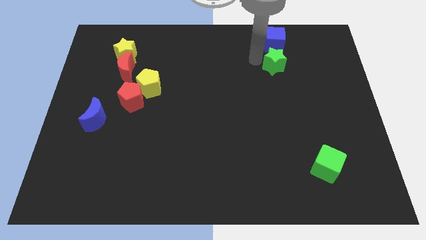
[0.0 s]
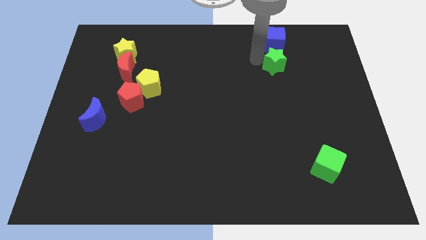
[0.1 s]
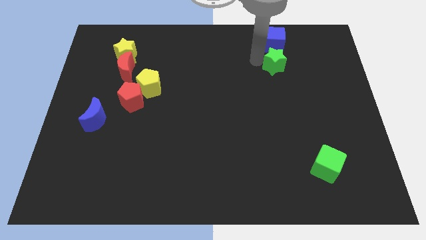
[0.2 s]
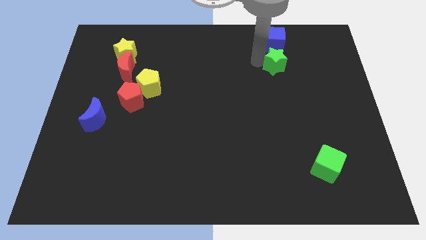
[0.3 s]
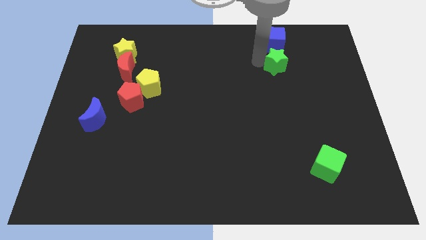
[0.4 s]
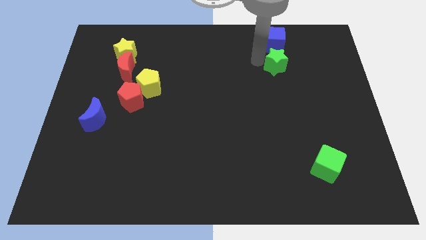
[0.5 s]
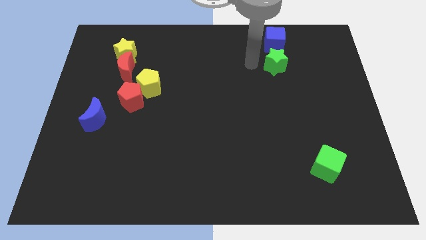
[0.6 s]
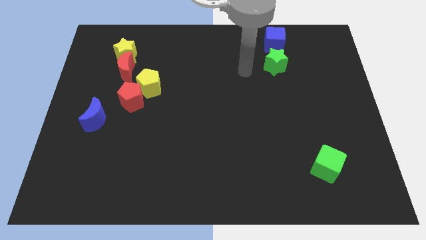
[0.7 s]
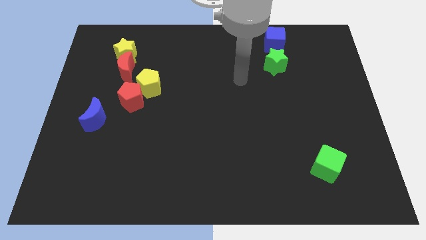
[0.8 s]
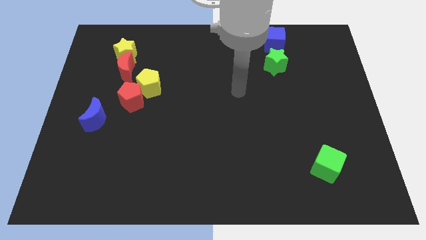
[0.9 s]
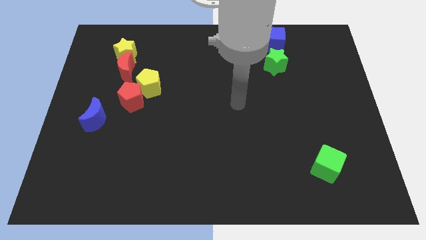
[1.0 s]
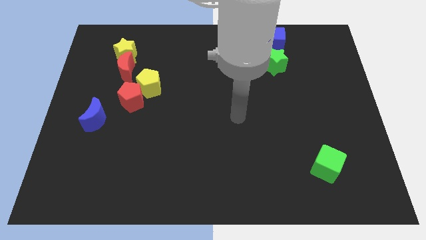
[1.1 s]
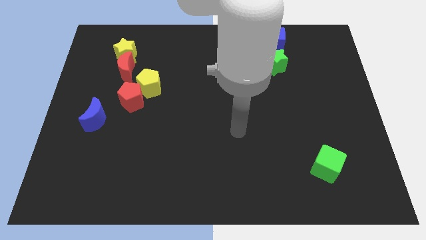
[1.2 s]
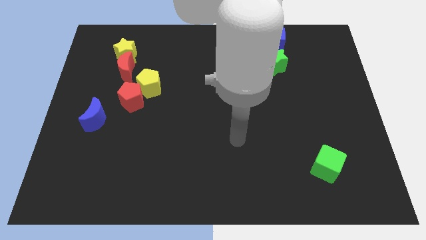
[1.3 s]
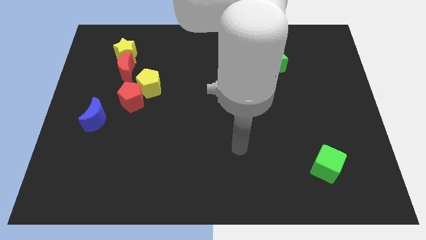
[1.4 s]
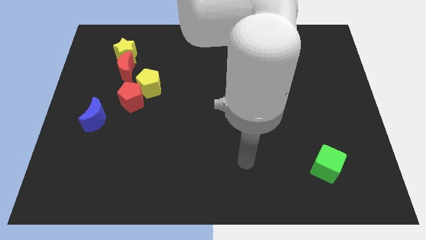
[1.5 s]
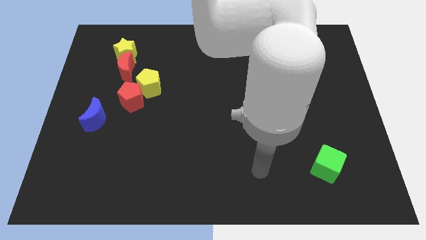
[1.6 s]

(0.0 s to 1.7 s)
touch the green star move your arm towards green cube

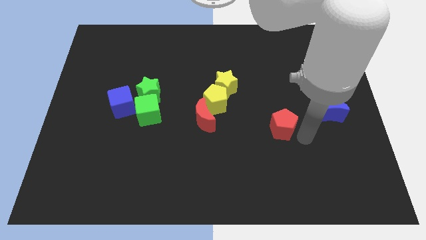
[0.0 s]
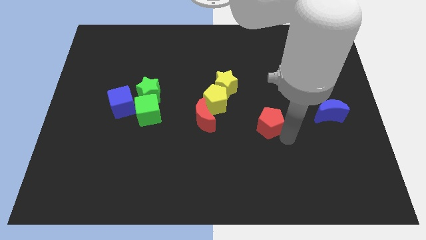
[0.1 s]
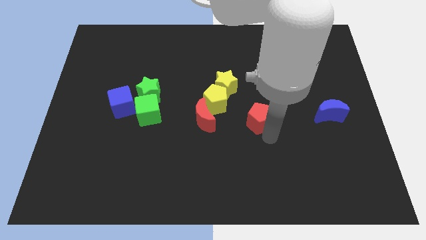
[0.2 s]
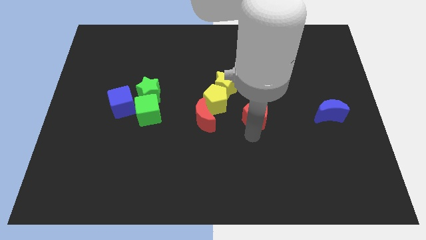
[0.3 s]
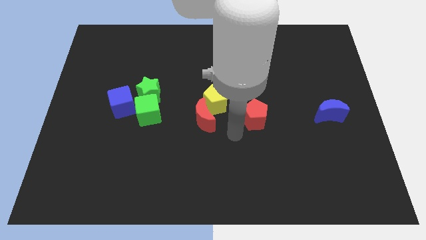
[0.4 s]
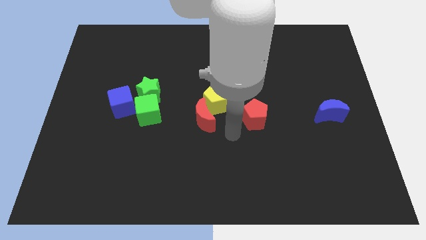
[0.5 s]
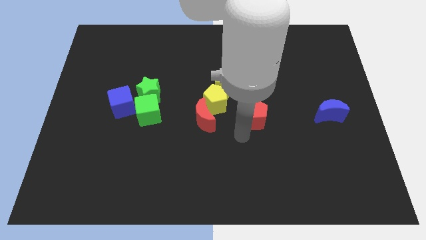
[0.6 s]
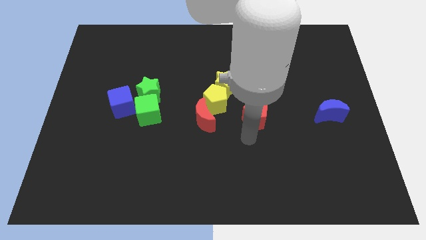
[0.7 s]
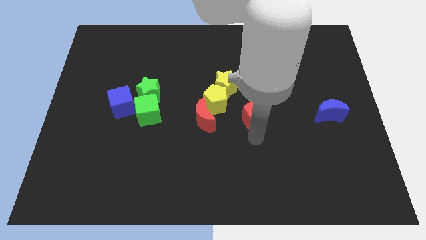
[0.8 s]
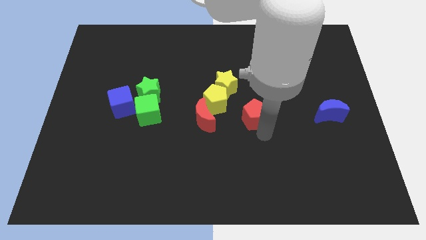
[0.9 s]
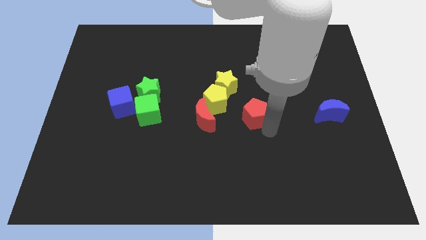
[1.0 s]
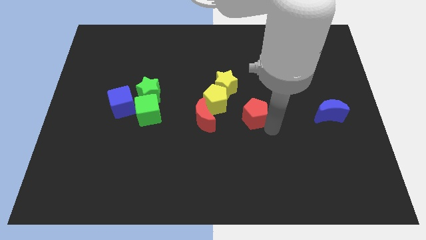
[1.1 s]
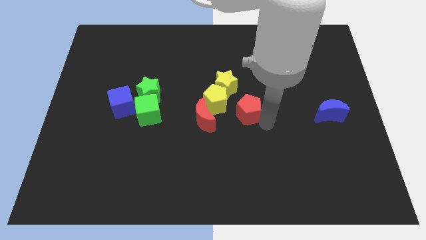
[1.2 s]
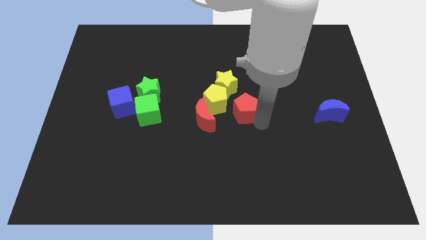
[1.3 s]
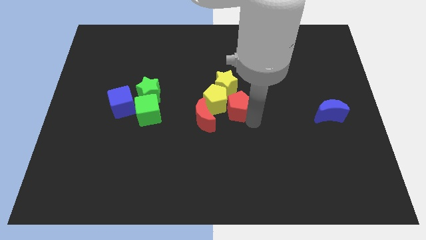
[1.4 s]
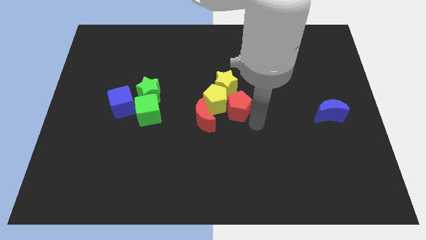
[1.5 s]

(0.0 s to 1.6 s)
place the red pentagon close to the yellow pentagon

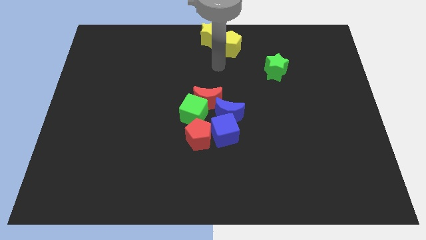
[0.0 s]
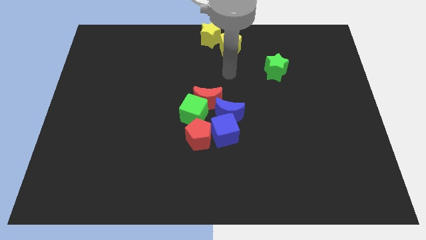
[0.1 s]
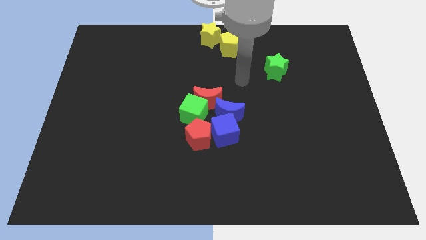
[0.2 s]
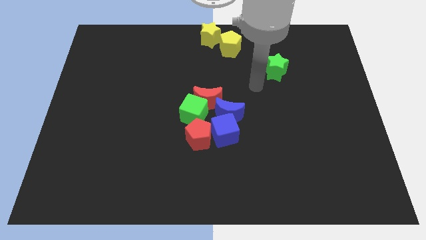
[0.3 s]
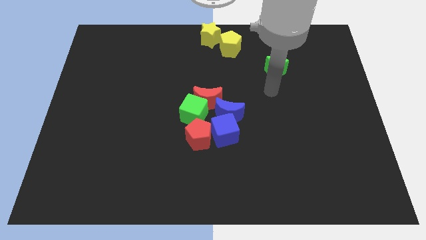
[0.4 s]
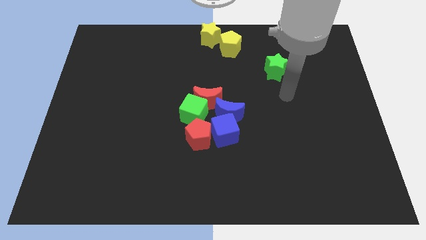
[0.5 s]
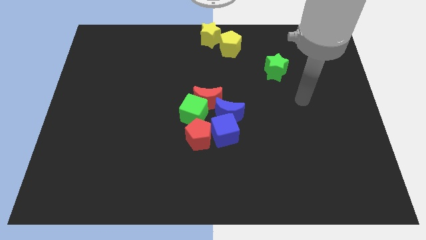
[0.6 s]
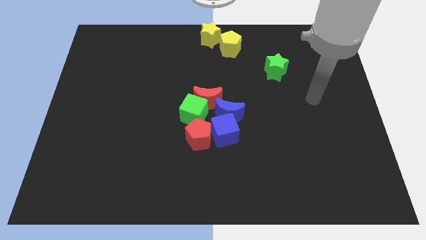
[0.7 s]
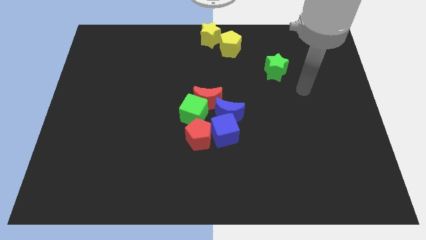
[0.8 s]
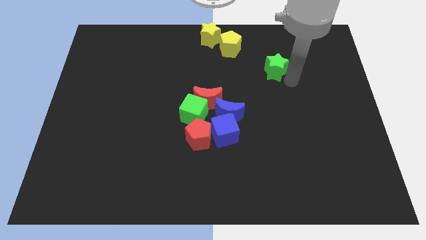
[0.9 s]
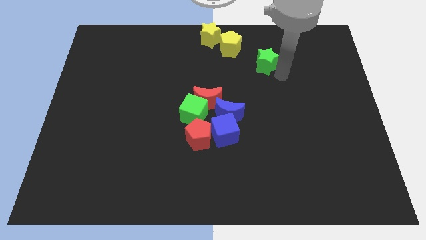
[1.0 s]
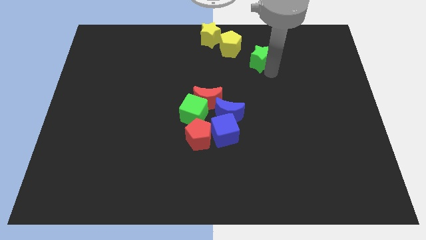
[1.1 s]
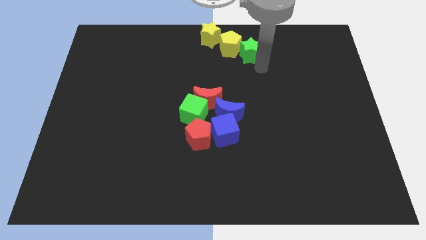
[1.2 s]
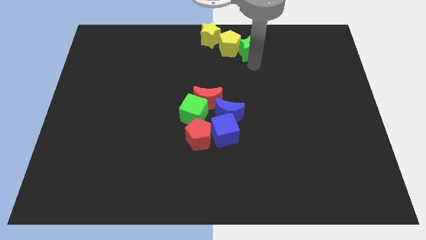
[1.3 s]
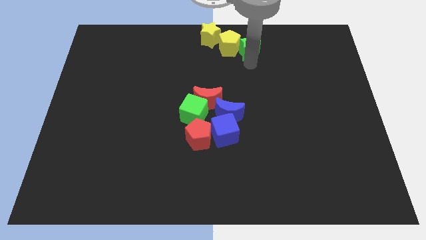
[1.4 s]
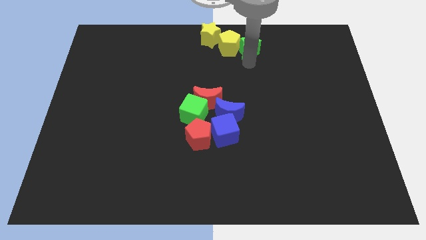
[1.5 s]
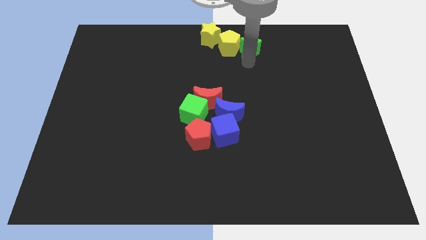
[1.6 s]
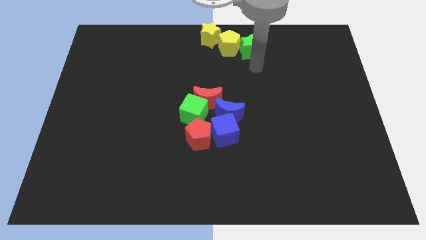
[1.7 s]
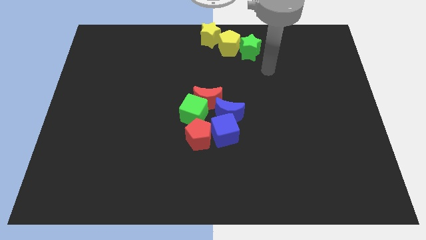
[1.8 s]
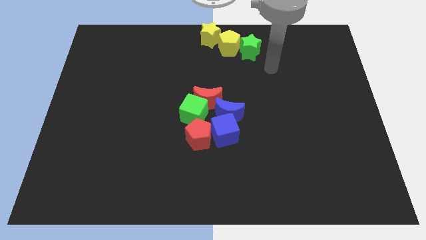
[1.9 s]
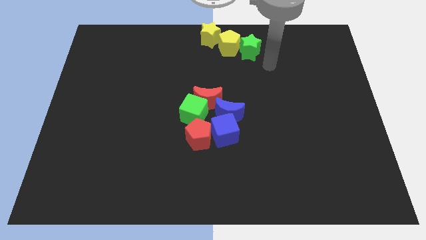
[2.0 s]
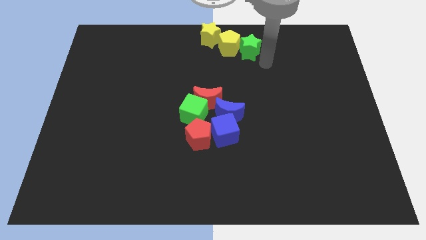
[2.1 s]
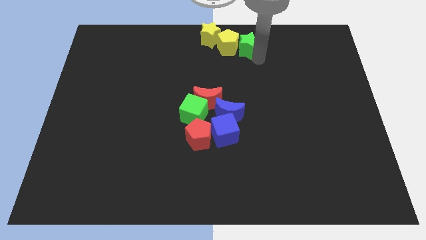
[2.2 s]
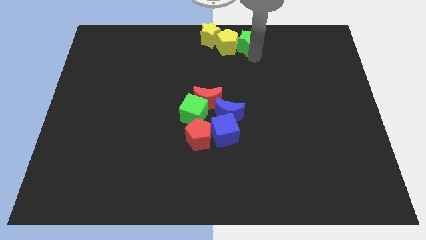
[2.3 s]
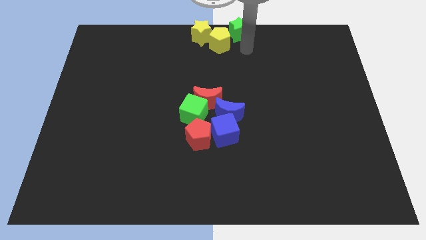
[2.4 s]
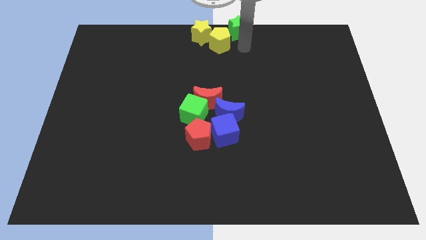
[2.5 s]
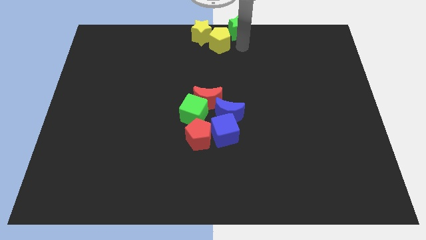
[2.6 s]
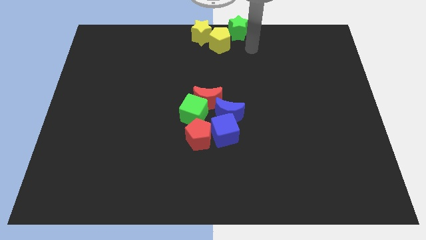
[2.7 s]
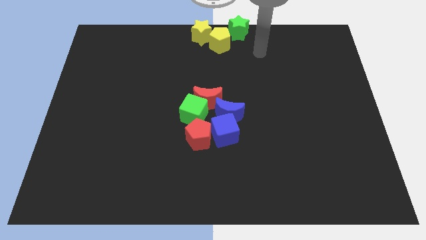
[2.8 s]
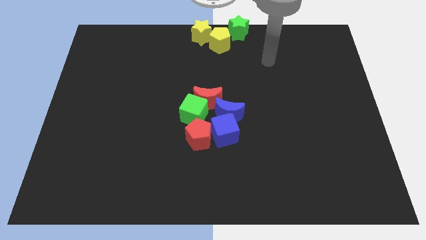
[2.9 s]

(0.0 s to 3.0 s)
move the green star on top beside yellow pentagon

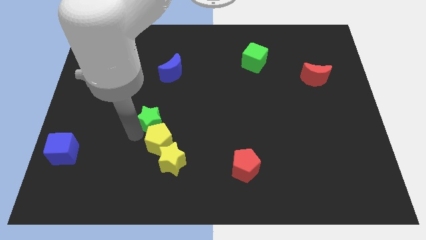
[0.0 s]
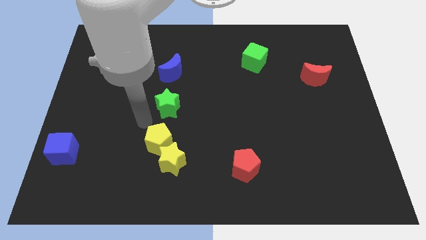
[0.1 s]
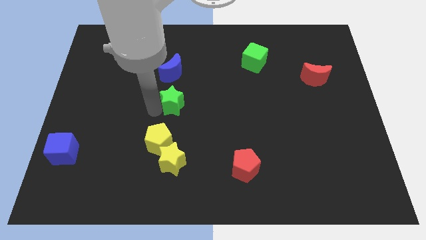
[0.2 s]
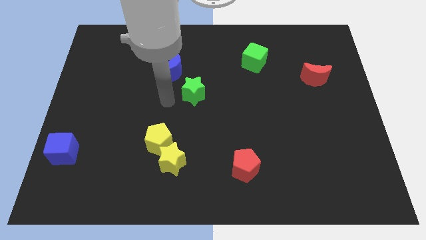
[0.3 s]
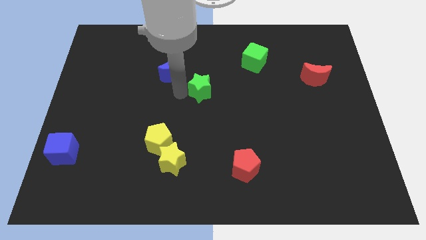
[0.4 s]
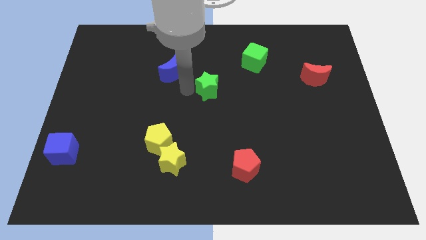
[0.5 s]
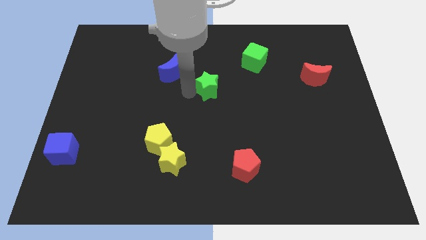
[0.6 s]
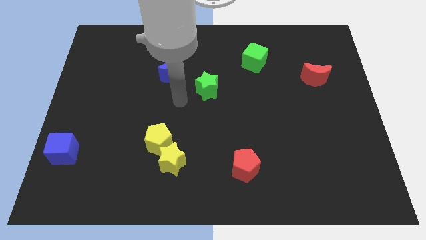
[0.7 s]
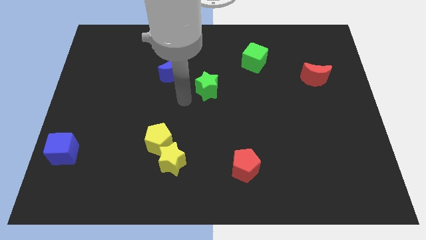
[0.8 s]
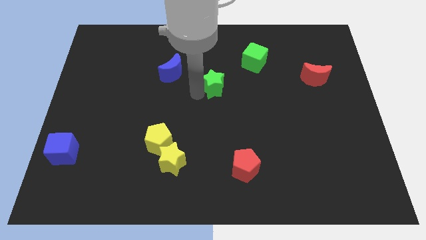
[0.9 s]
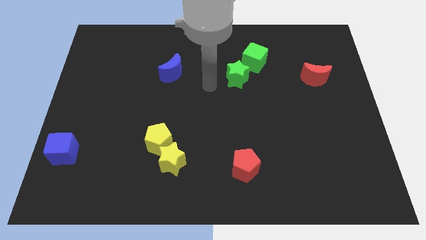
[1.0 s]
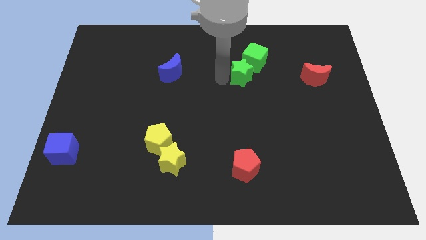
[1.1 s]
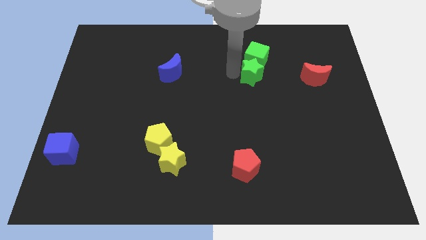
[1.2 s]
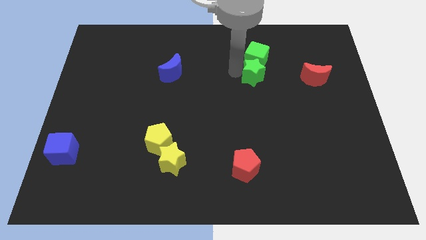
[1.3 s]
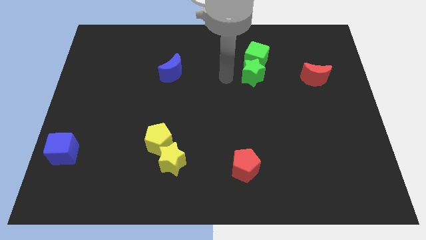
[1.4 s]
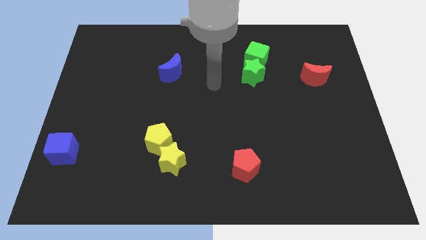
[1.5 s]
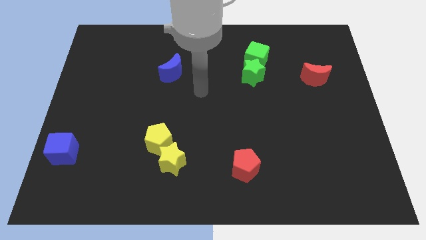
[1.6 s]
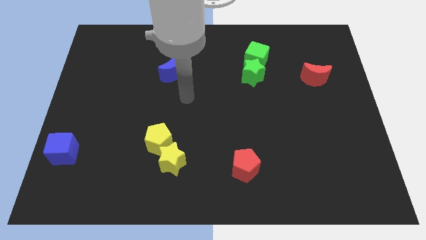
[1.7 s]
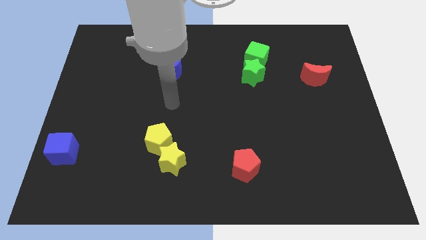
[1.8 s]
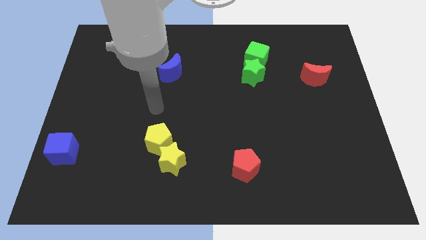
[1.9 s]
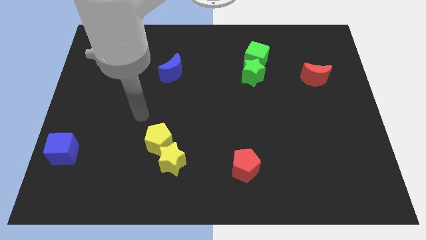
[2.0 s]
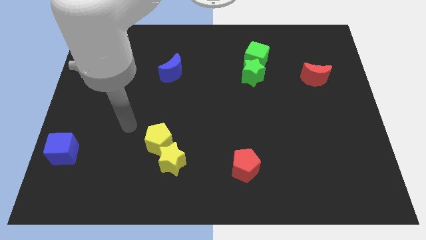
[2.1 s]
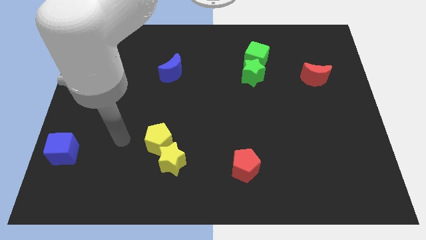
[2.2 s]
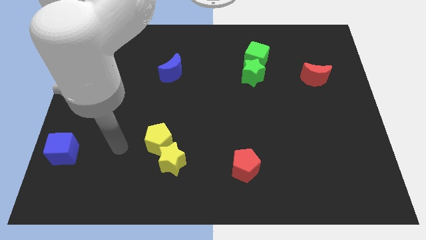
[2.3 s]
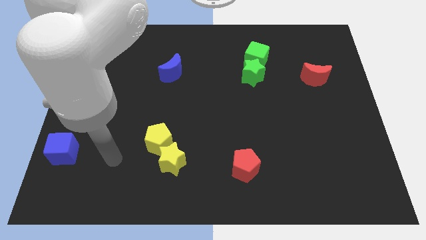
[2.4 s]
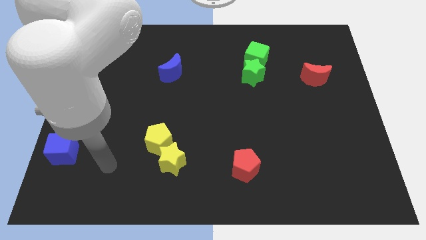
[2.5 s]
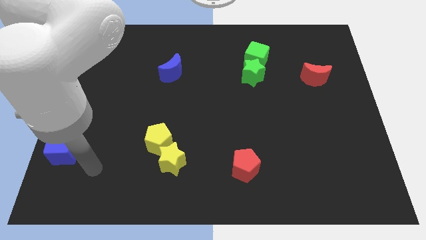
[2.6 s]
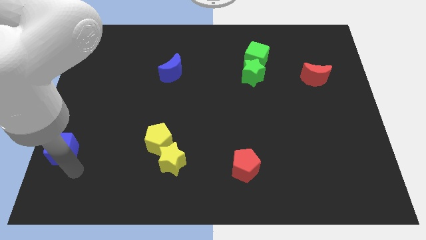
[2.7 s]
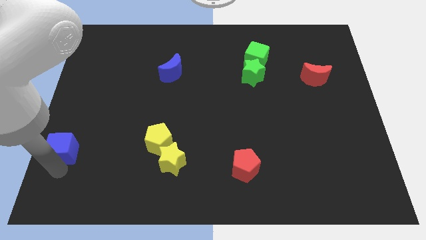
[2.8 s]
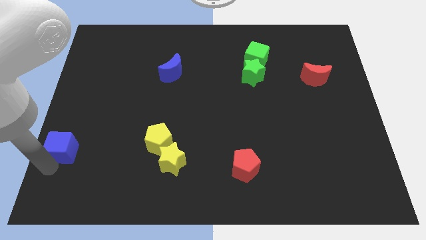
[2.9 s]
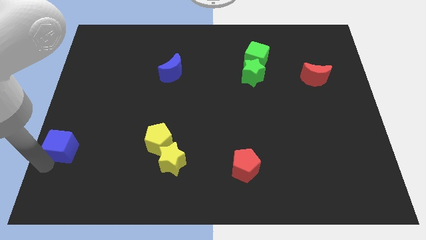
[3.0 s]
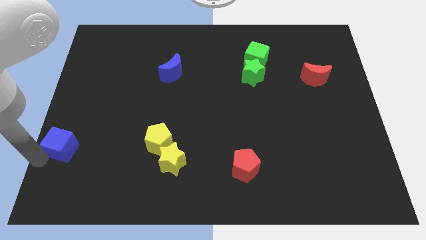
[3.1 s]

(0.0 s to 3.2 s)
push the green star into the green cube
